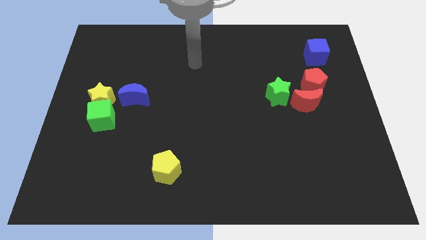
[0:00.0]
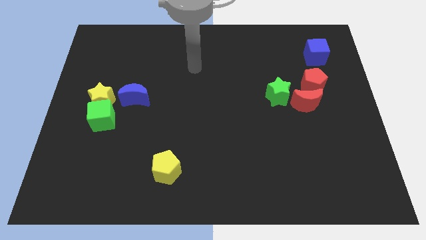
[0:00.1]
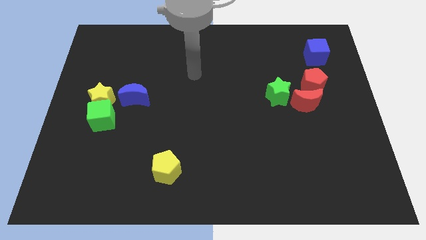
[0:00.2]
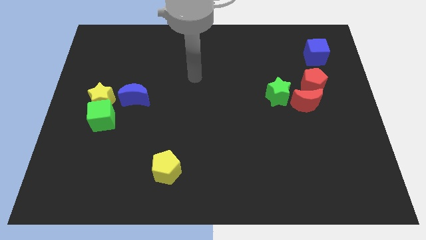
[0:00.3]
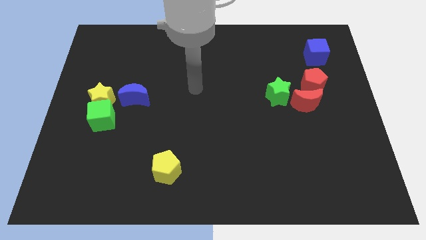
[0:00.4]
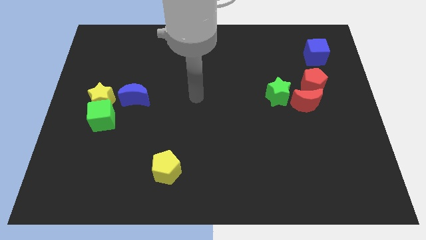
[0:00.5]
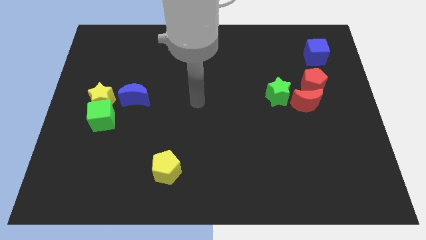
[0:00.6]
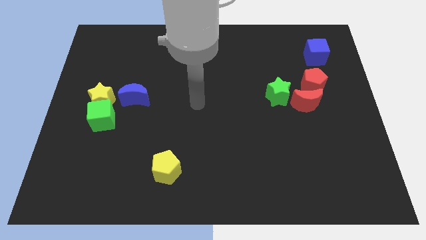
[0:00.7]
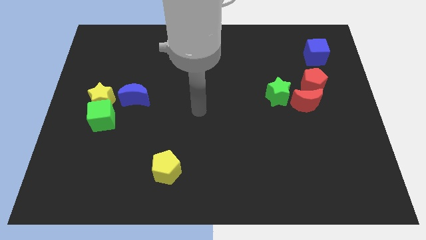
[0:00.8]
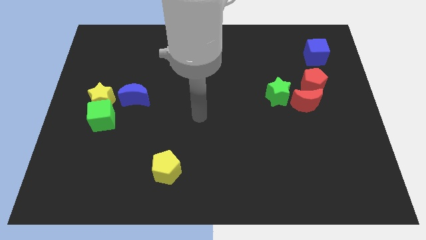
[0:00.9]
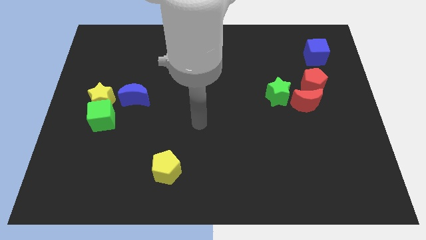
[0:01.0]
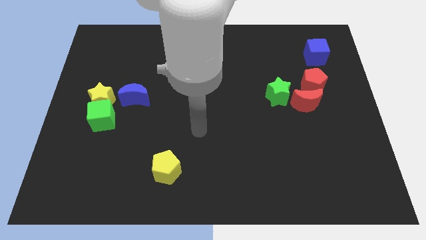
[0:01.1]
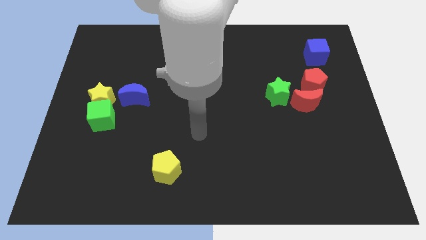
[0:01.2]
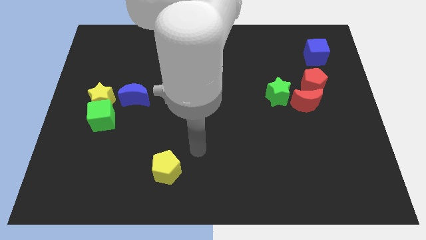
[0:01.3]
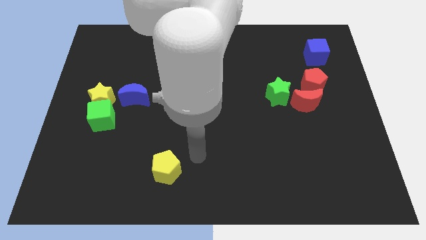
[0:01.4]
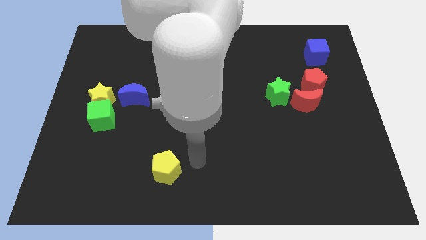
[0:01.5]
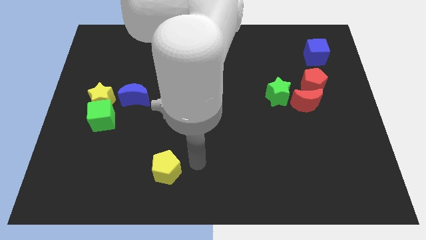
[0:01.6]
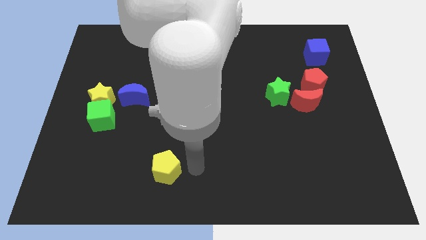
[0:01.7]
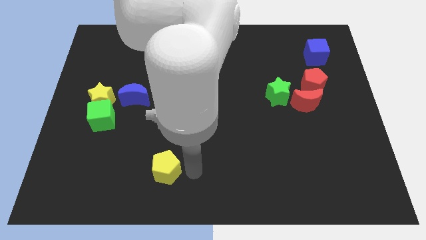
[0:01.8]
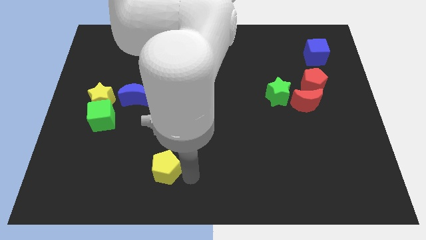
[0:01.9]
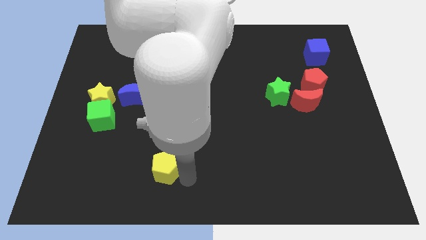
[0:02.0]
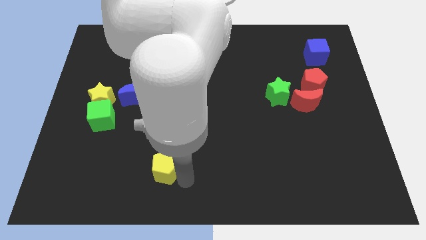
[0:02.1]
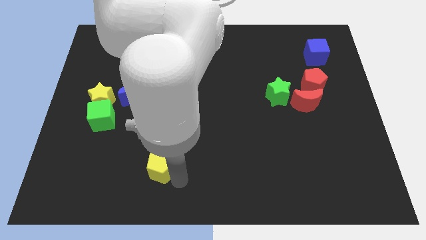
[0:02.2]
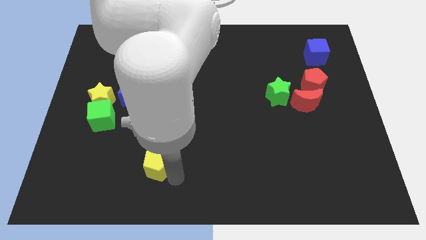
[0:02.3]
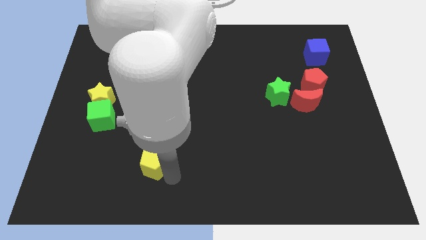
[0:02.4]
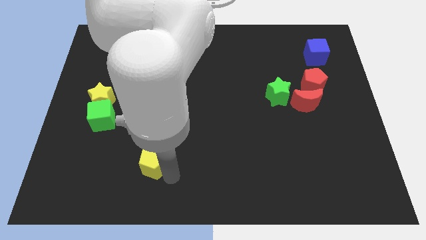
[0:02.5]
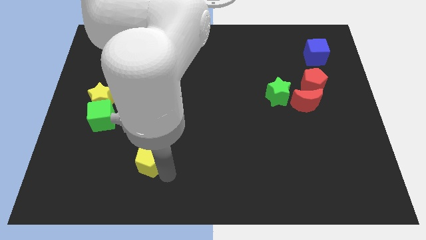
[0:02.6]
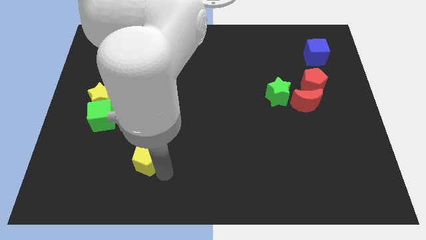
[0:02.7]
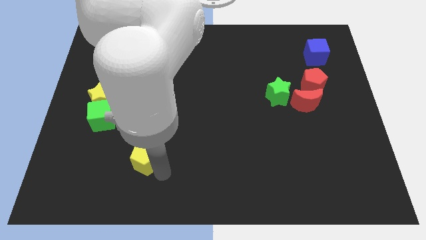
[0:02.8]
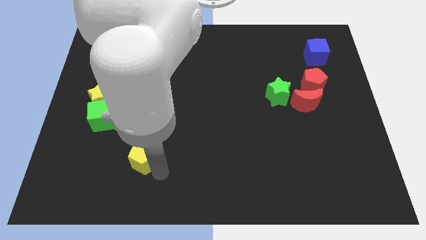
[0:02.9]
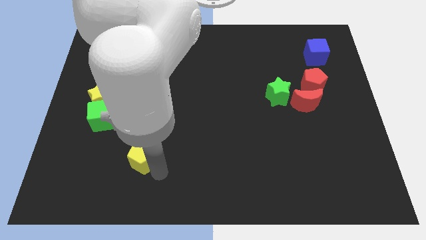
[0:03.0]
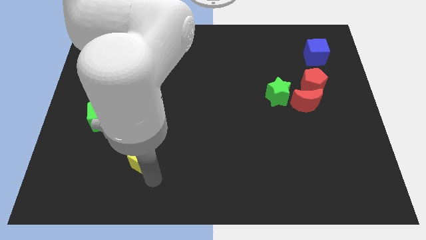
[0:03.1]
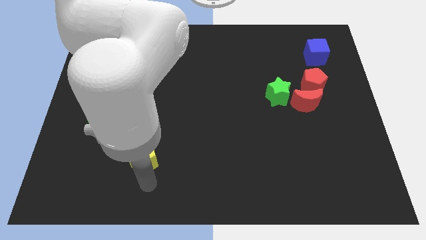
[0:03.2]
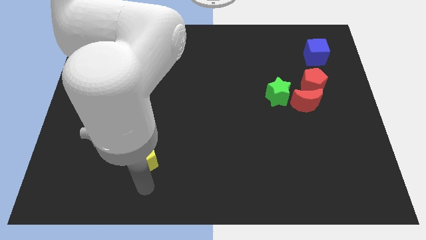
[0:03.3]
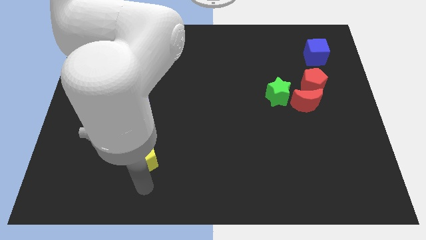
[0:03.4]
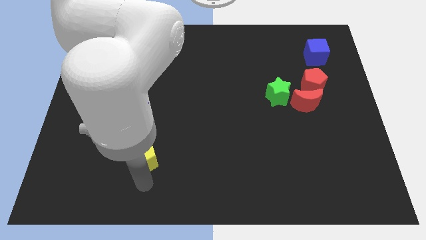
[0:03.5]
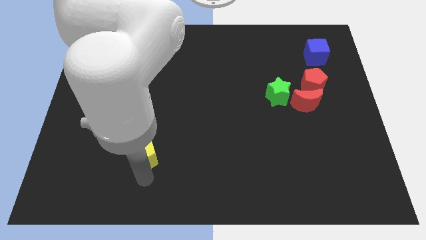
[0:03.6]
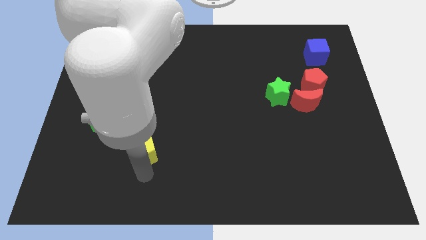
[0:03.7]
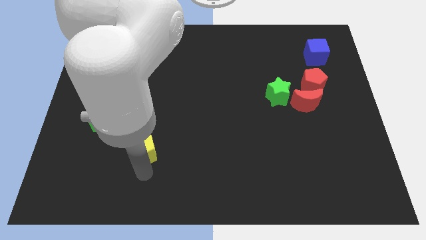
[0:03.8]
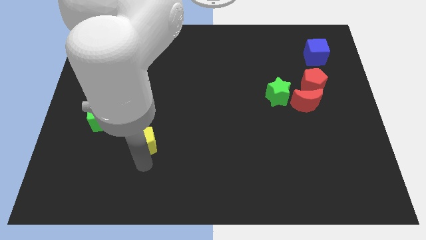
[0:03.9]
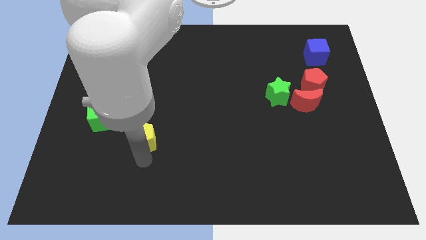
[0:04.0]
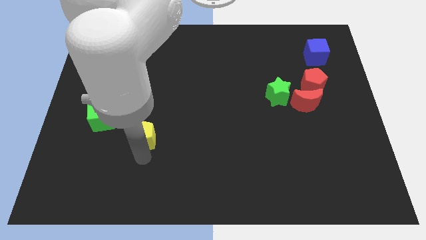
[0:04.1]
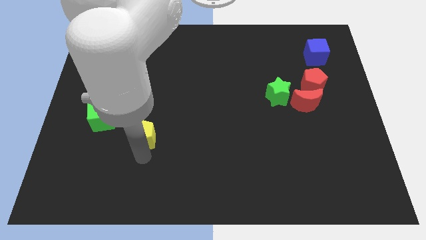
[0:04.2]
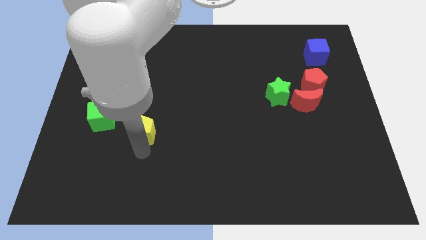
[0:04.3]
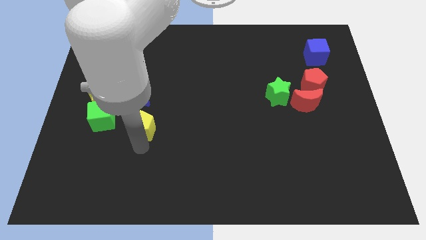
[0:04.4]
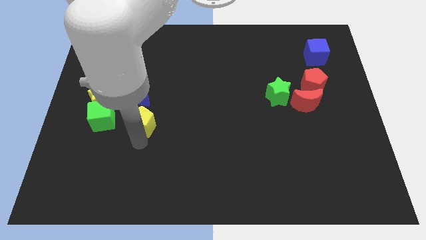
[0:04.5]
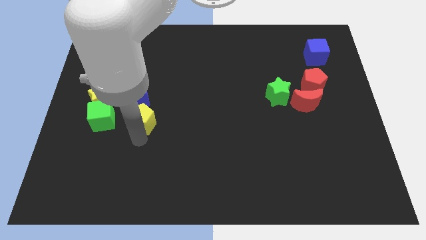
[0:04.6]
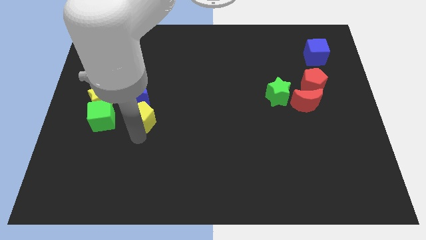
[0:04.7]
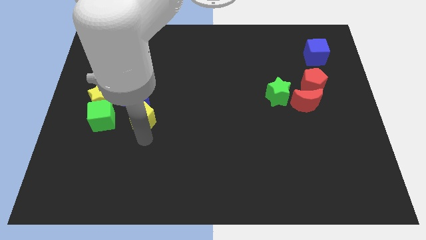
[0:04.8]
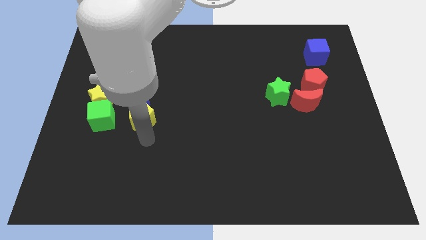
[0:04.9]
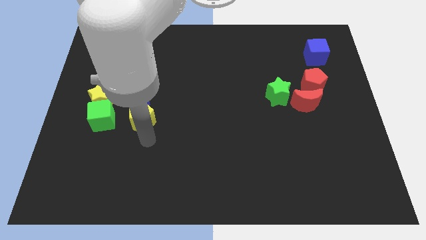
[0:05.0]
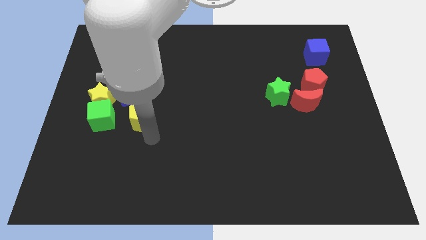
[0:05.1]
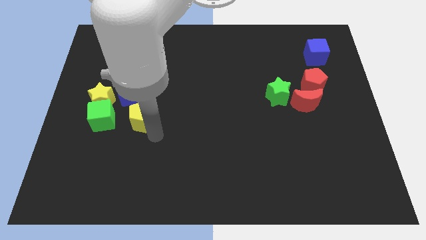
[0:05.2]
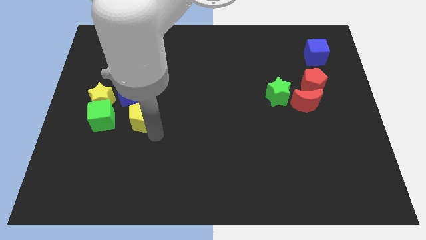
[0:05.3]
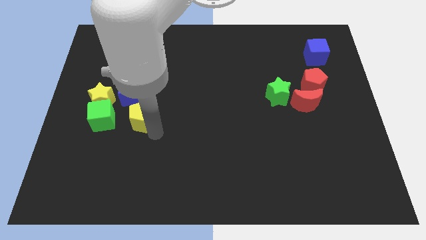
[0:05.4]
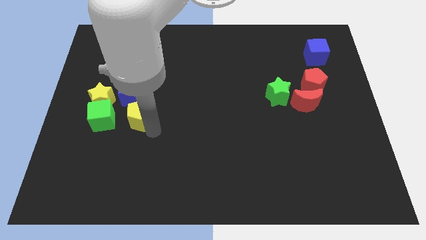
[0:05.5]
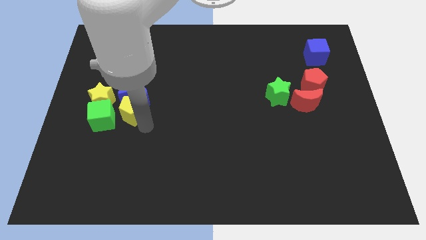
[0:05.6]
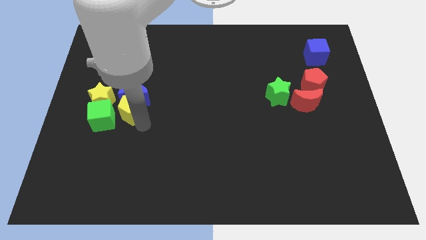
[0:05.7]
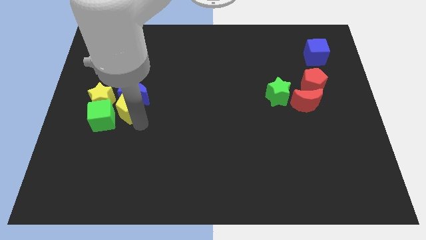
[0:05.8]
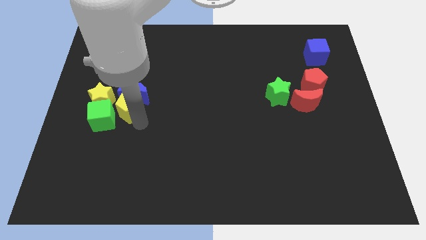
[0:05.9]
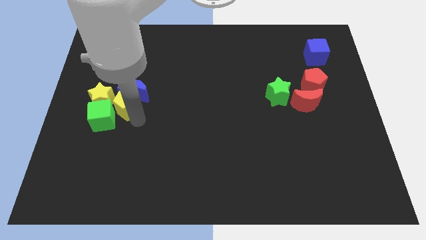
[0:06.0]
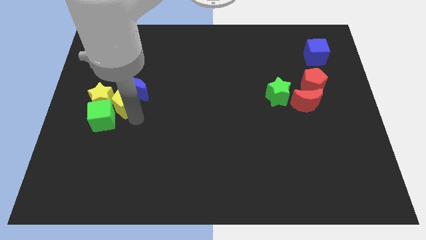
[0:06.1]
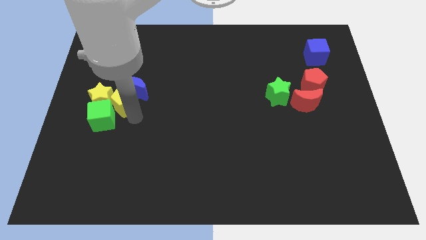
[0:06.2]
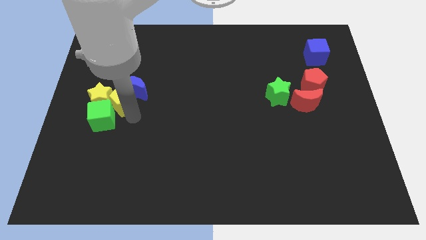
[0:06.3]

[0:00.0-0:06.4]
push the yellow pentagon to the yellow star

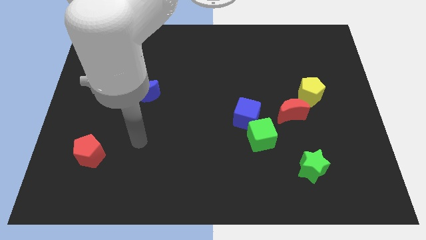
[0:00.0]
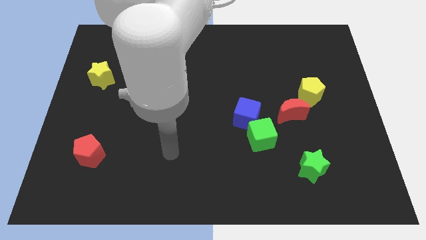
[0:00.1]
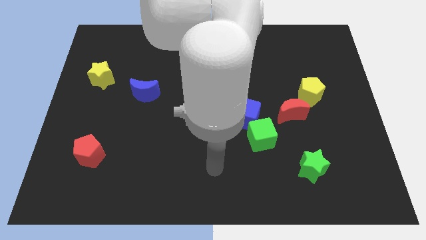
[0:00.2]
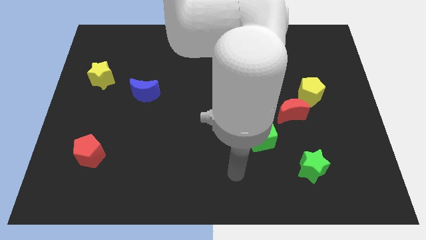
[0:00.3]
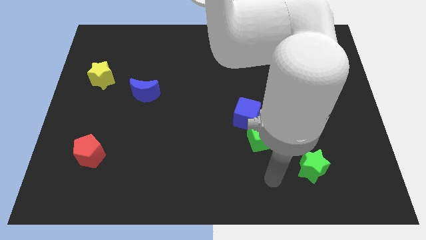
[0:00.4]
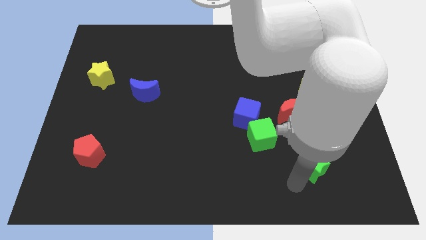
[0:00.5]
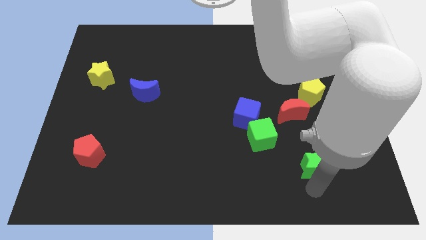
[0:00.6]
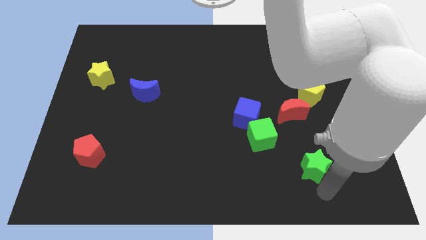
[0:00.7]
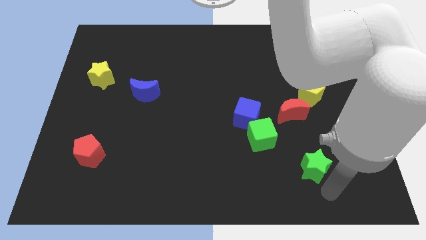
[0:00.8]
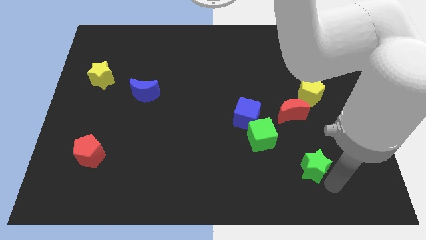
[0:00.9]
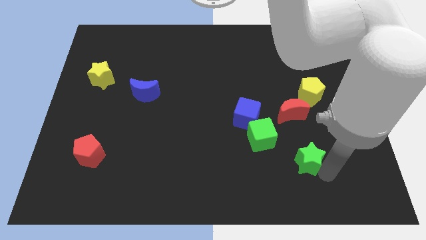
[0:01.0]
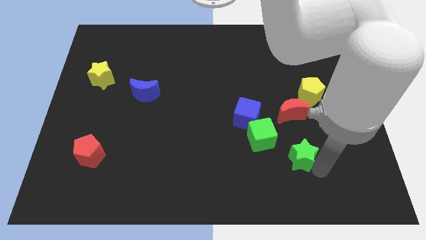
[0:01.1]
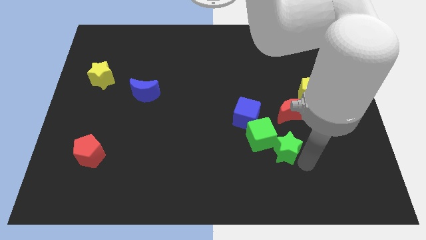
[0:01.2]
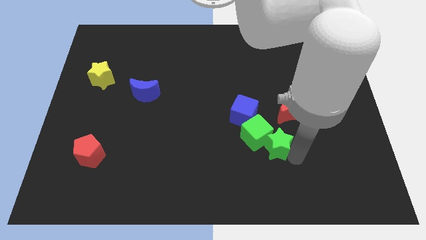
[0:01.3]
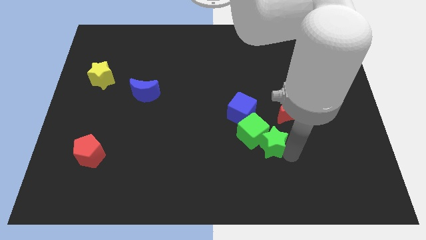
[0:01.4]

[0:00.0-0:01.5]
move the green star towards the green cube
